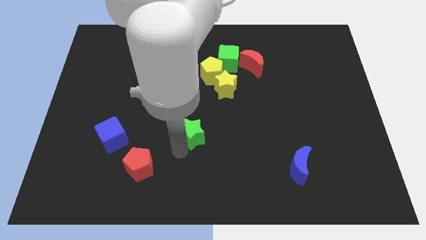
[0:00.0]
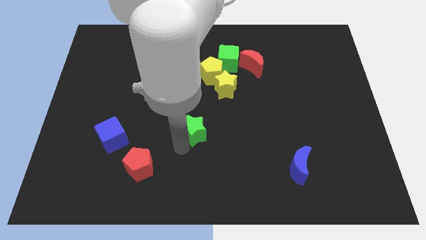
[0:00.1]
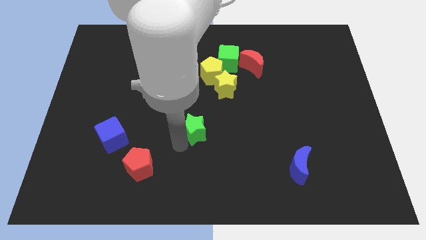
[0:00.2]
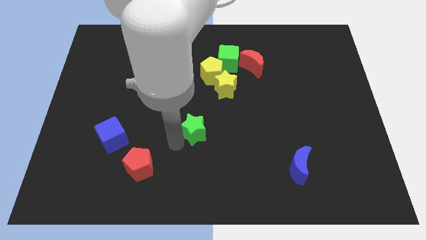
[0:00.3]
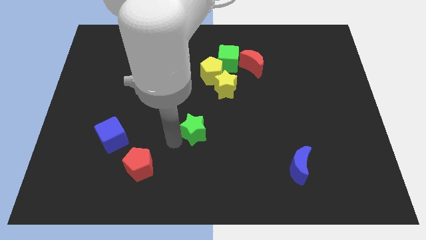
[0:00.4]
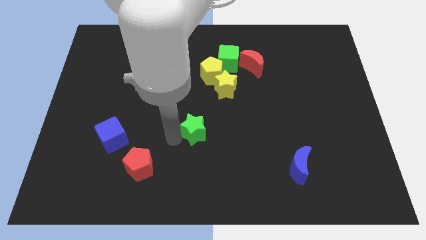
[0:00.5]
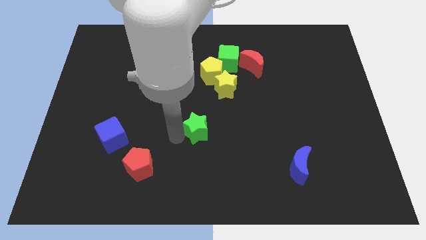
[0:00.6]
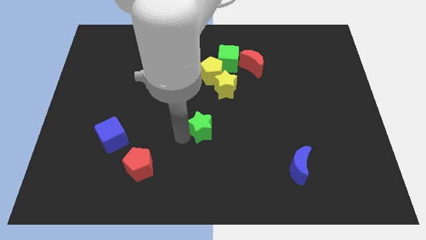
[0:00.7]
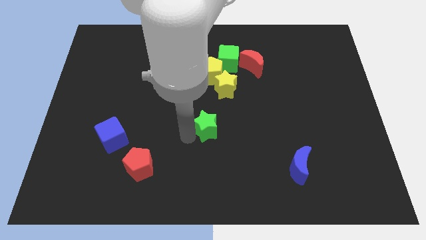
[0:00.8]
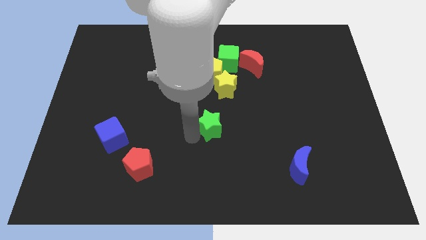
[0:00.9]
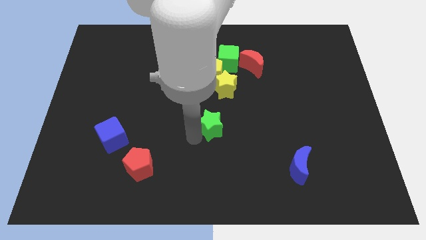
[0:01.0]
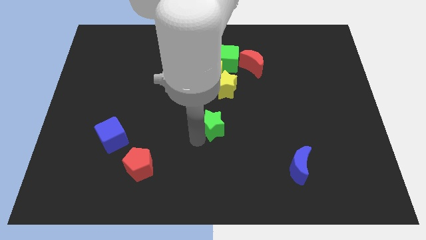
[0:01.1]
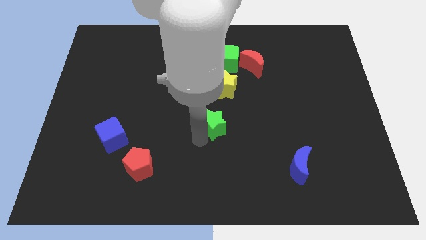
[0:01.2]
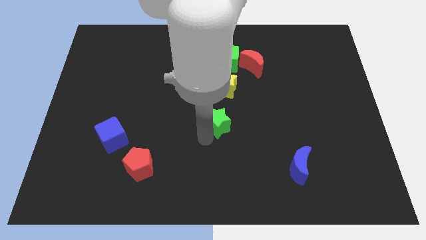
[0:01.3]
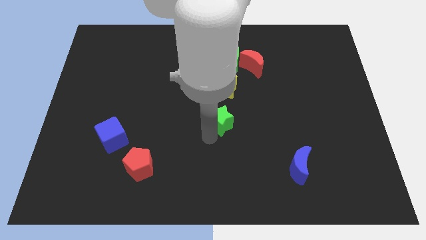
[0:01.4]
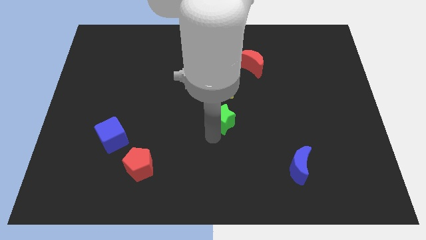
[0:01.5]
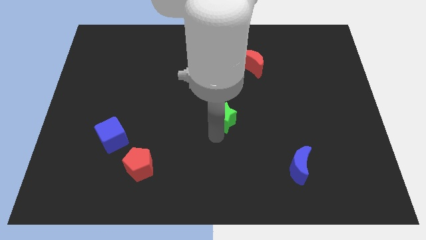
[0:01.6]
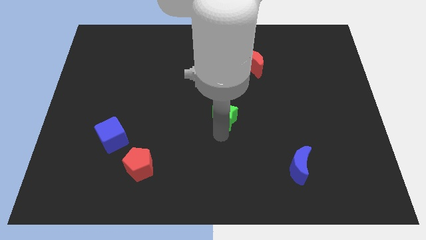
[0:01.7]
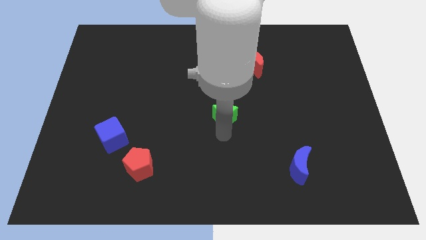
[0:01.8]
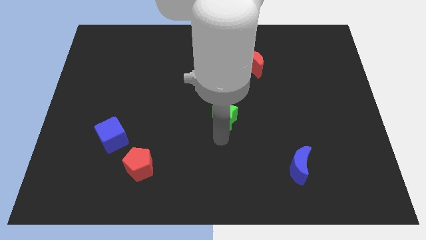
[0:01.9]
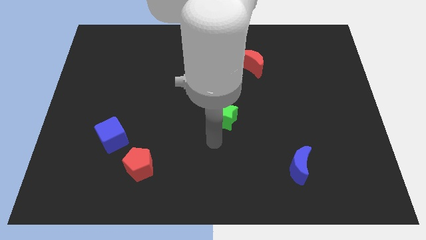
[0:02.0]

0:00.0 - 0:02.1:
place green star below yellow star

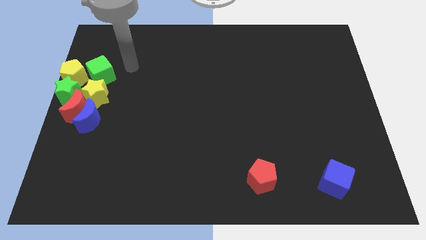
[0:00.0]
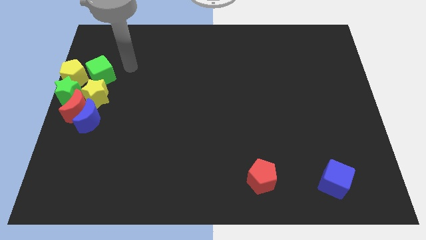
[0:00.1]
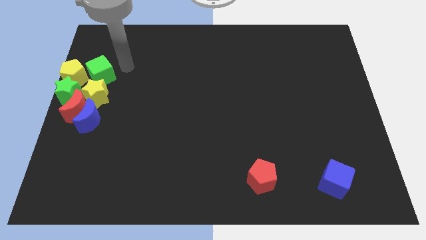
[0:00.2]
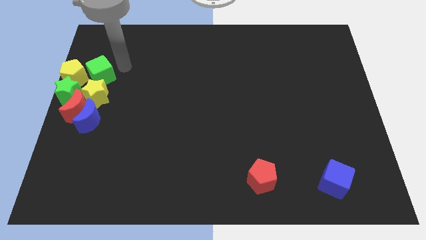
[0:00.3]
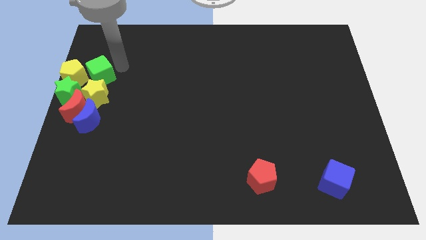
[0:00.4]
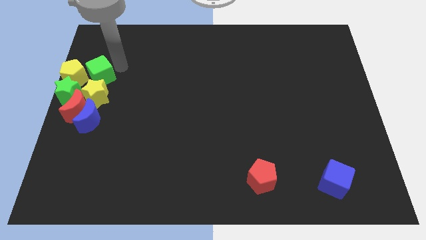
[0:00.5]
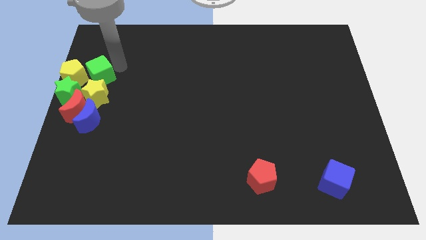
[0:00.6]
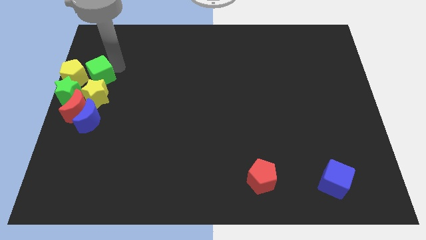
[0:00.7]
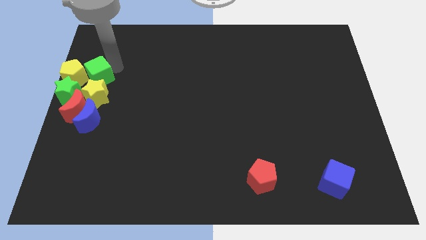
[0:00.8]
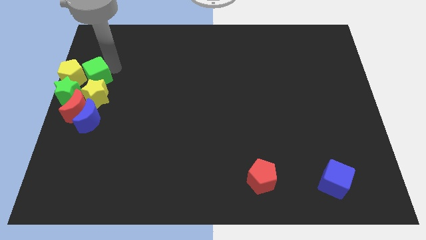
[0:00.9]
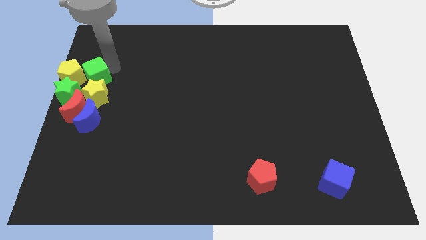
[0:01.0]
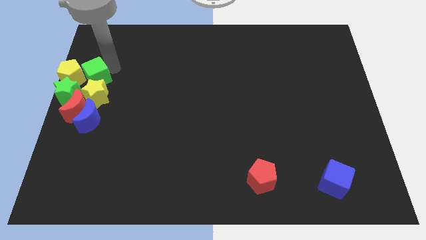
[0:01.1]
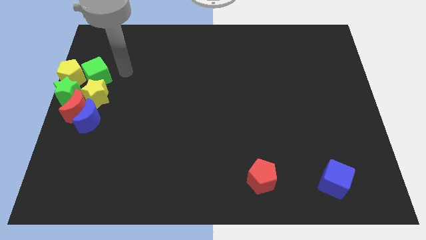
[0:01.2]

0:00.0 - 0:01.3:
push the green cube into the yellow pentagon

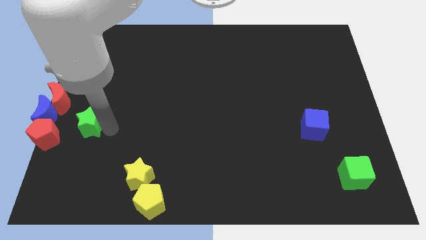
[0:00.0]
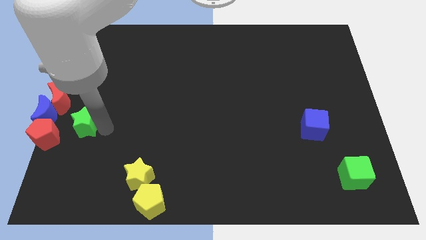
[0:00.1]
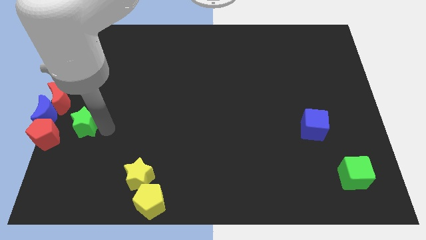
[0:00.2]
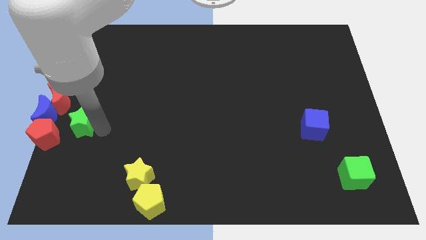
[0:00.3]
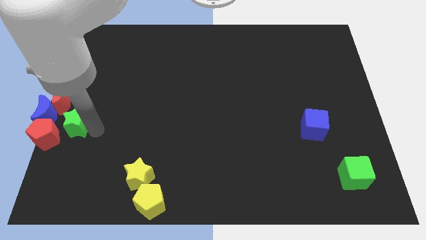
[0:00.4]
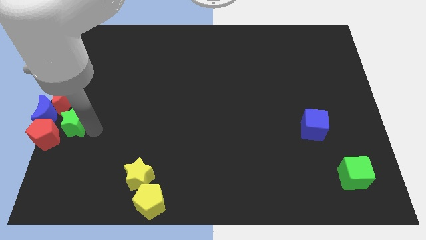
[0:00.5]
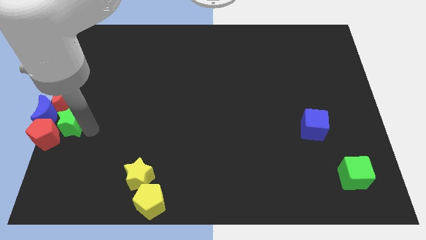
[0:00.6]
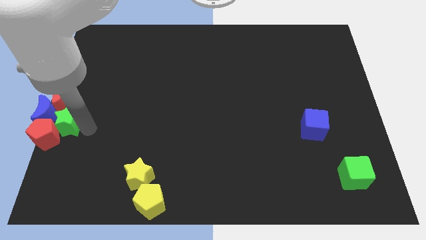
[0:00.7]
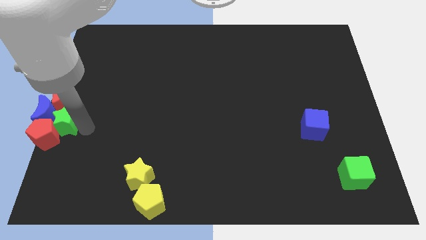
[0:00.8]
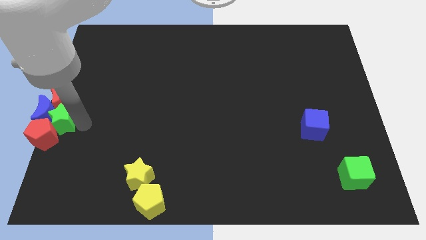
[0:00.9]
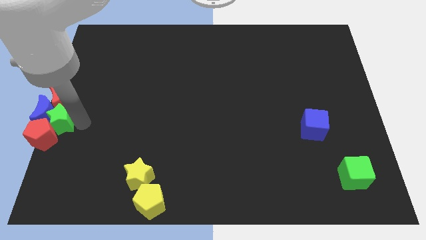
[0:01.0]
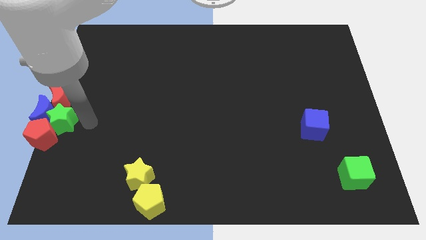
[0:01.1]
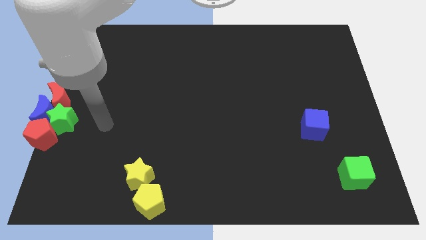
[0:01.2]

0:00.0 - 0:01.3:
push the green star to the right of the blue crescent

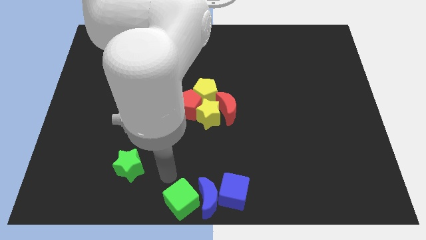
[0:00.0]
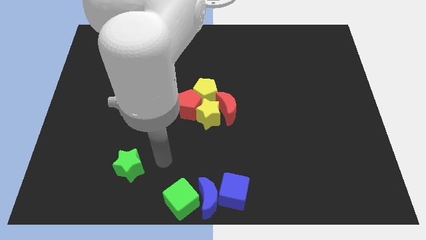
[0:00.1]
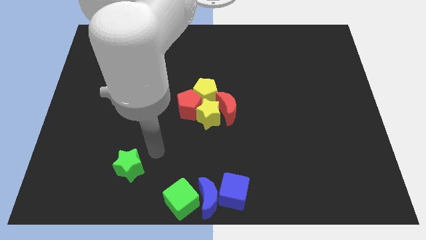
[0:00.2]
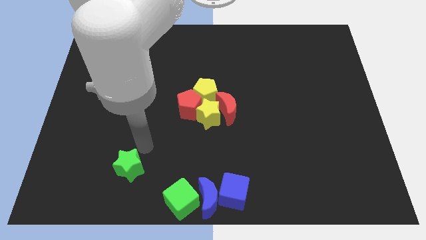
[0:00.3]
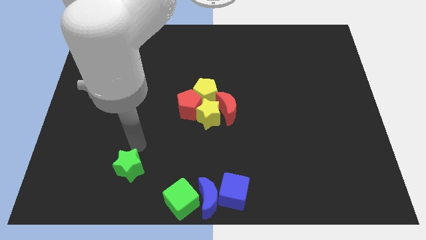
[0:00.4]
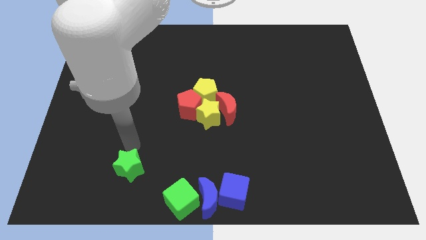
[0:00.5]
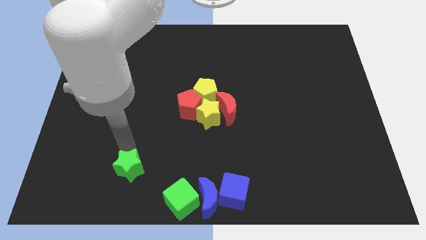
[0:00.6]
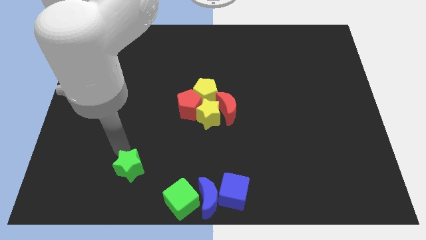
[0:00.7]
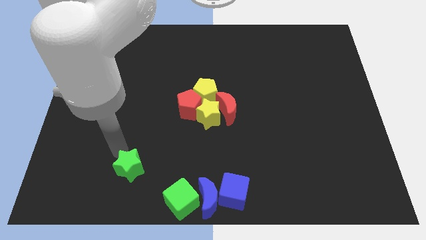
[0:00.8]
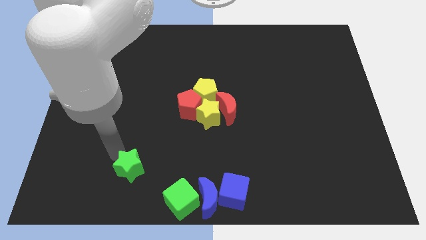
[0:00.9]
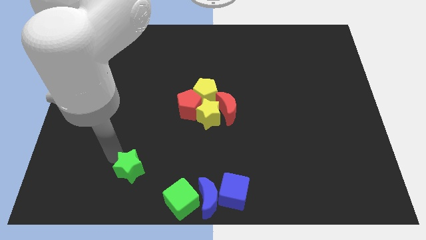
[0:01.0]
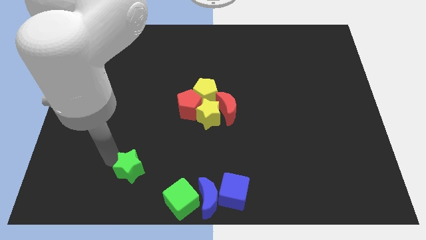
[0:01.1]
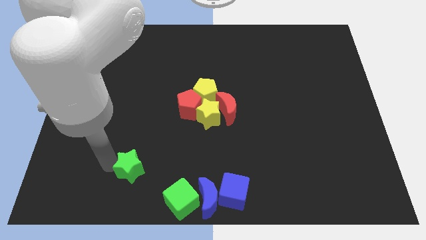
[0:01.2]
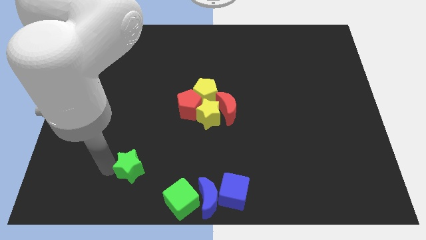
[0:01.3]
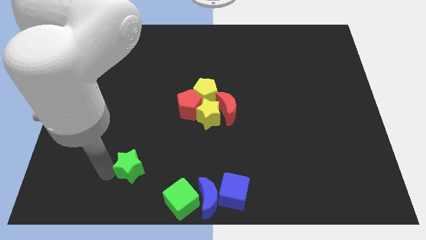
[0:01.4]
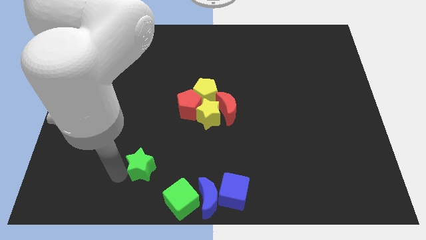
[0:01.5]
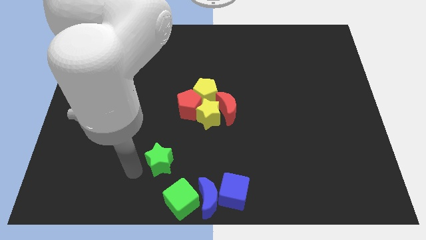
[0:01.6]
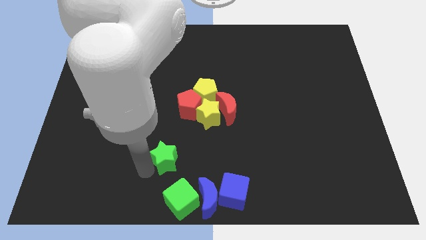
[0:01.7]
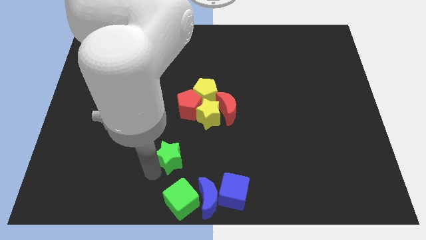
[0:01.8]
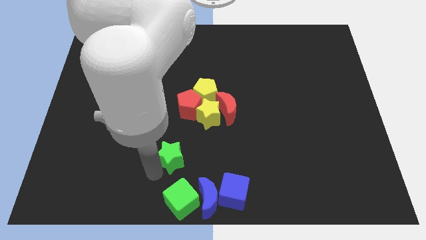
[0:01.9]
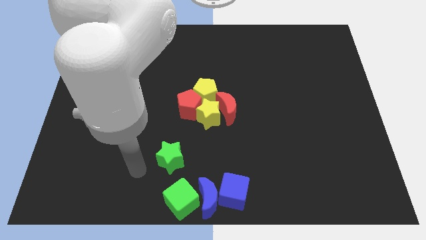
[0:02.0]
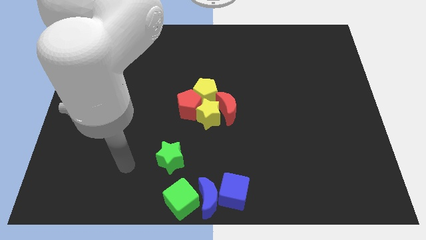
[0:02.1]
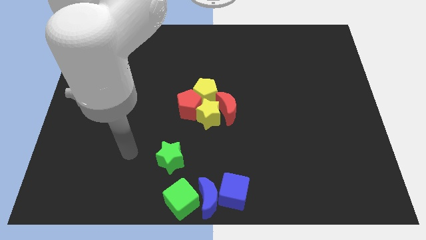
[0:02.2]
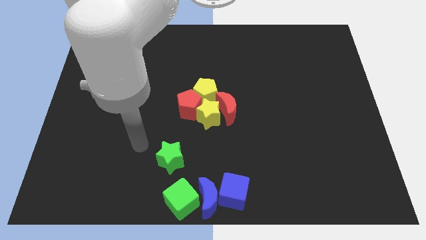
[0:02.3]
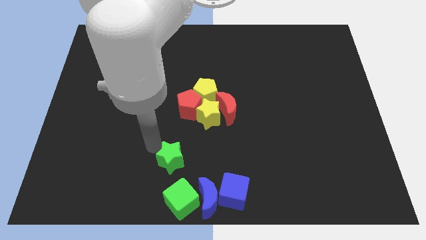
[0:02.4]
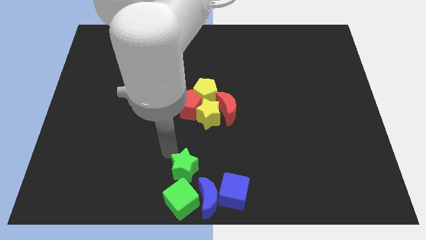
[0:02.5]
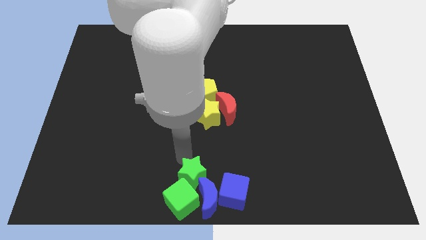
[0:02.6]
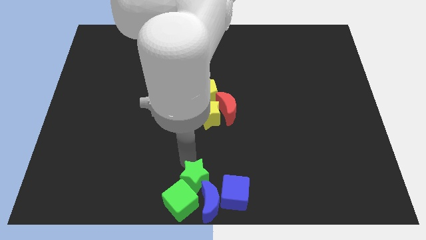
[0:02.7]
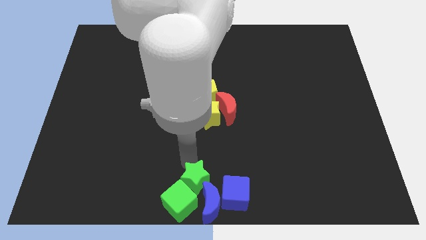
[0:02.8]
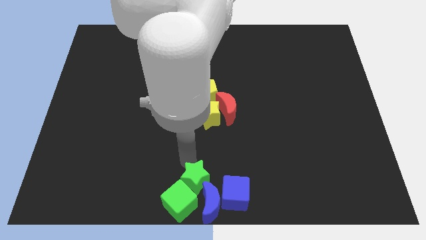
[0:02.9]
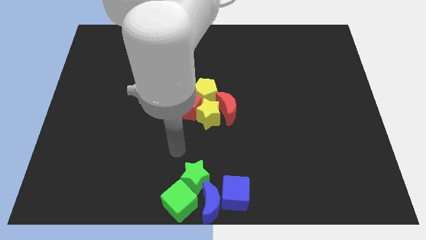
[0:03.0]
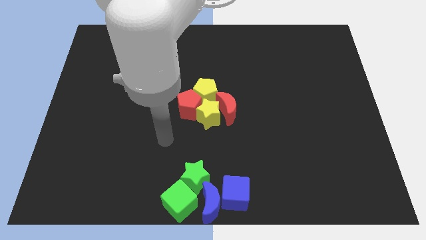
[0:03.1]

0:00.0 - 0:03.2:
move the green blocks towards the blue blocks at the bottom center

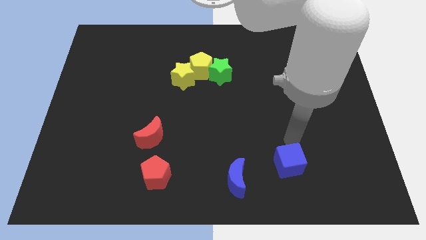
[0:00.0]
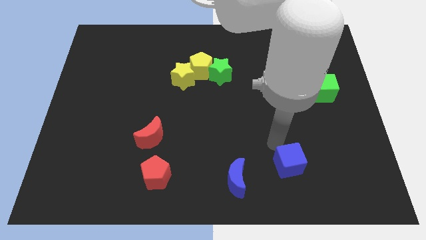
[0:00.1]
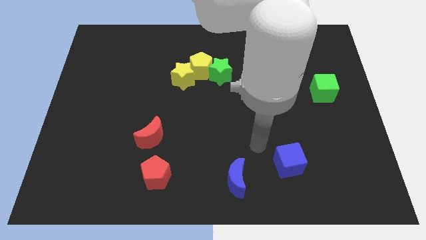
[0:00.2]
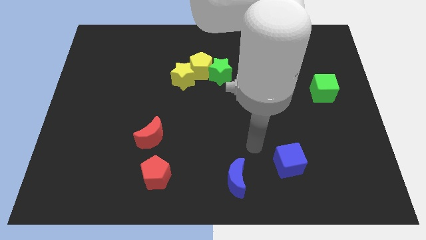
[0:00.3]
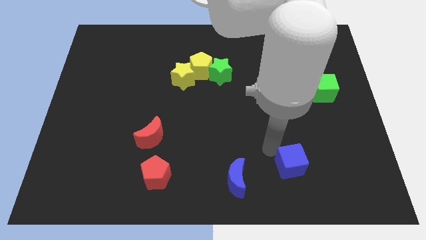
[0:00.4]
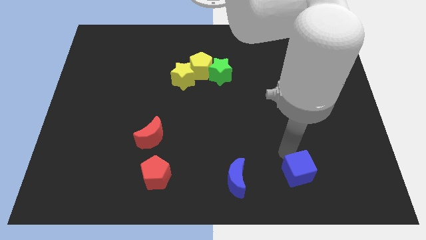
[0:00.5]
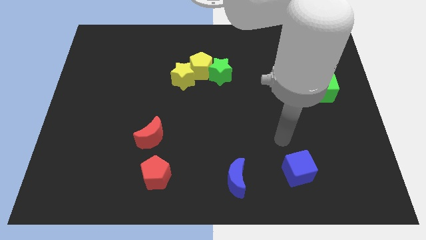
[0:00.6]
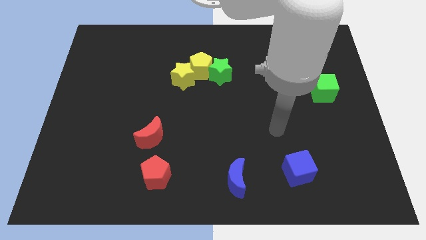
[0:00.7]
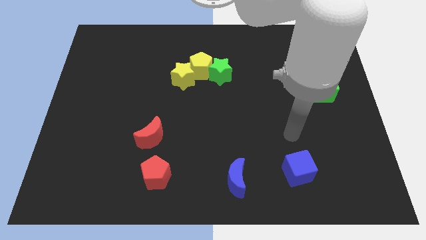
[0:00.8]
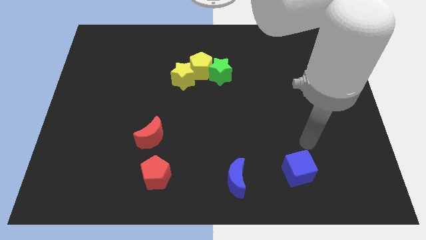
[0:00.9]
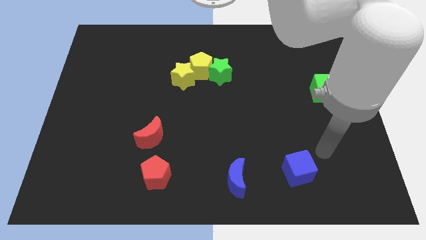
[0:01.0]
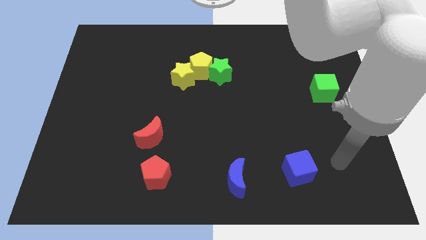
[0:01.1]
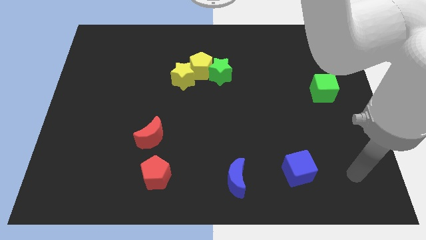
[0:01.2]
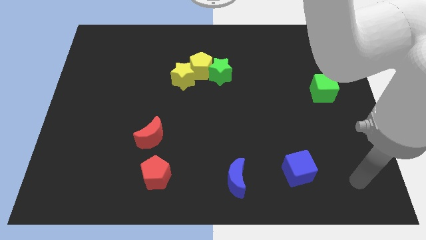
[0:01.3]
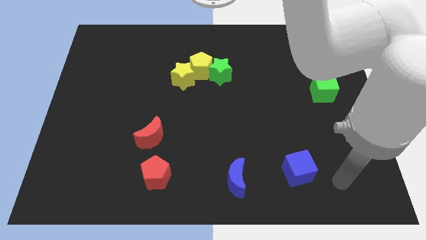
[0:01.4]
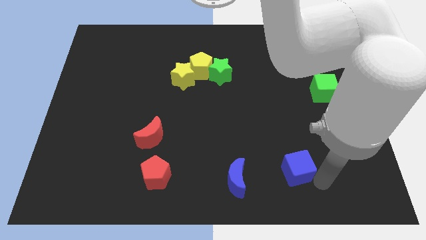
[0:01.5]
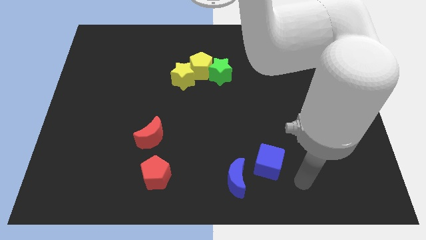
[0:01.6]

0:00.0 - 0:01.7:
push the blue cube to the right of the blue crescent
